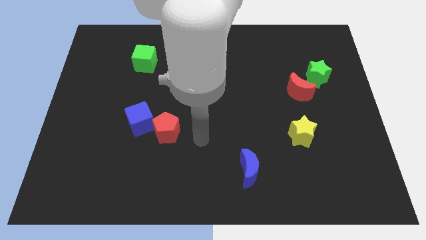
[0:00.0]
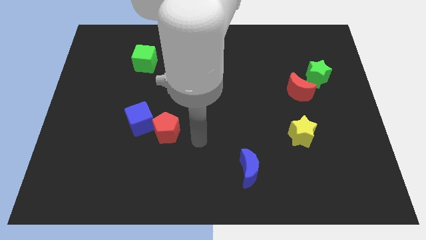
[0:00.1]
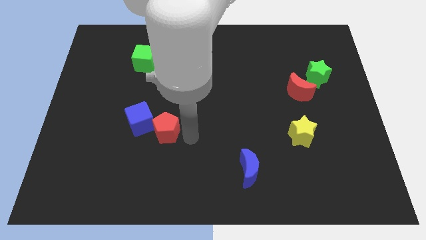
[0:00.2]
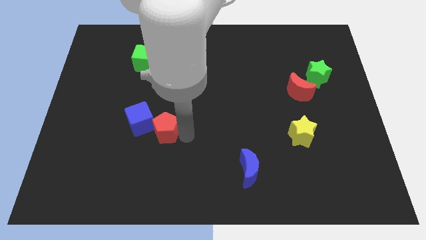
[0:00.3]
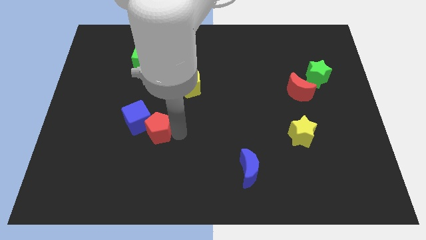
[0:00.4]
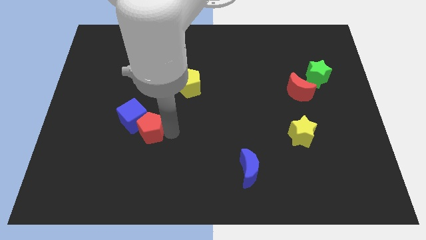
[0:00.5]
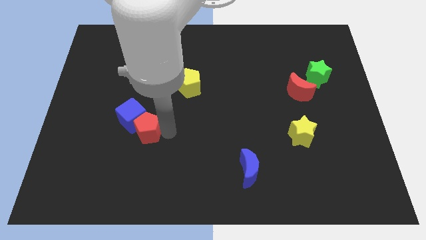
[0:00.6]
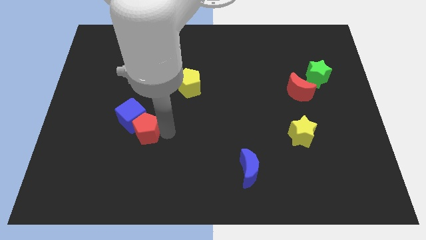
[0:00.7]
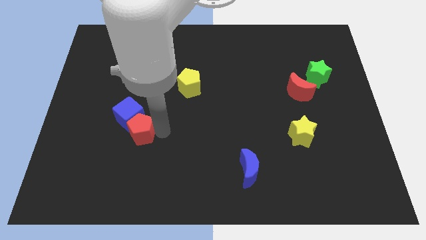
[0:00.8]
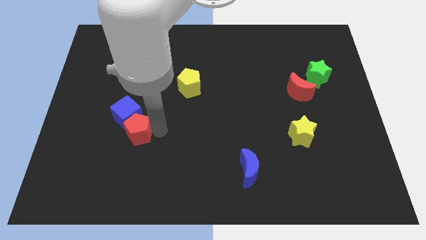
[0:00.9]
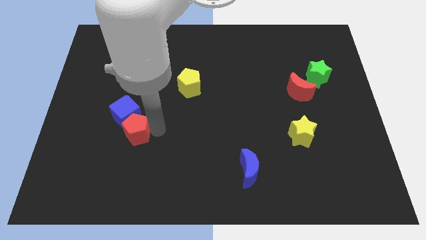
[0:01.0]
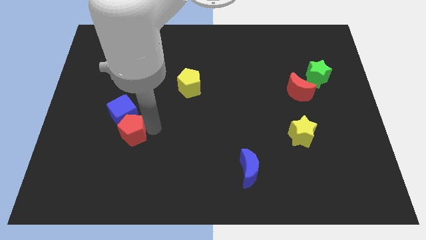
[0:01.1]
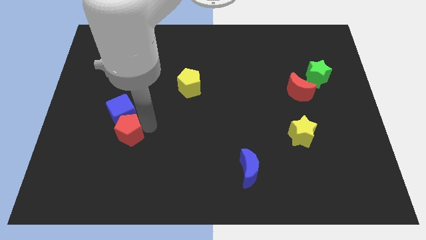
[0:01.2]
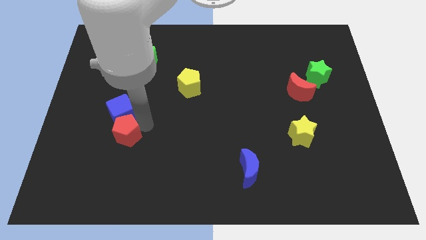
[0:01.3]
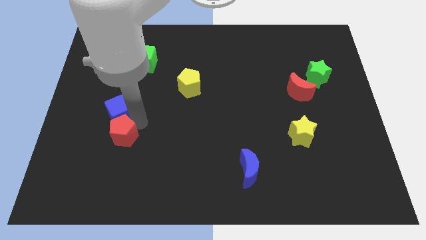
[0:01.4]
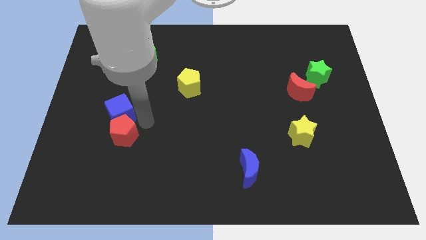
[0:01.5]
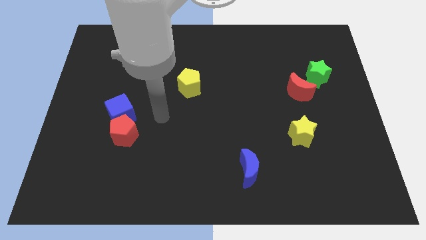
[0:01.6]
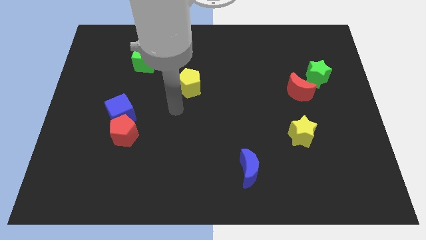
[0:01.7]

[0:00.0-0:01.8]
move the red pentagon to the left

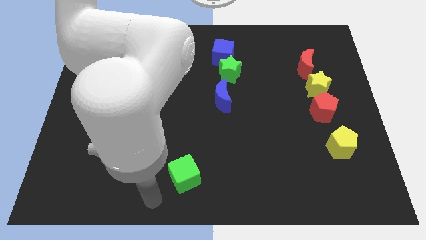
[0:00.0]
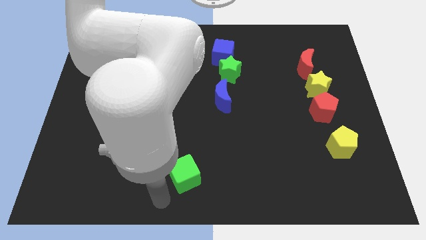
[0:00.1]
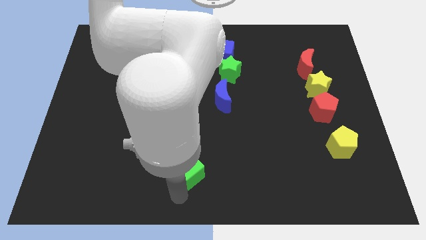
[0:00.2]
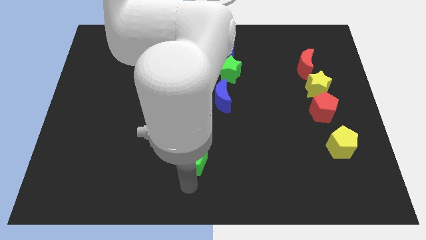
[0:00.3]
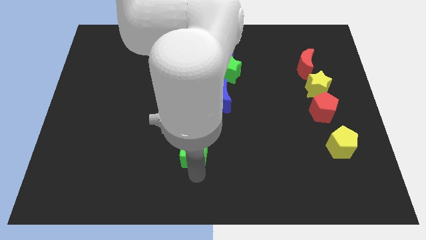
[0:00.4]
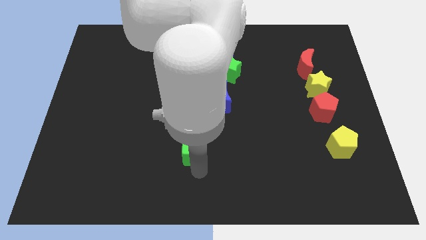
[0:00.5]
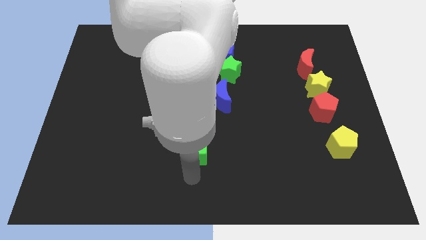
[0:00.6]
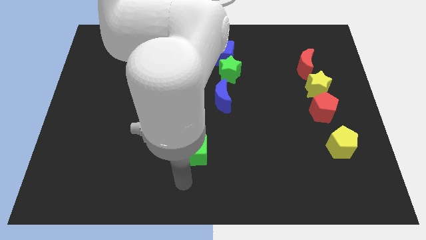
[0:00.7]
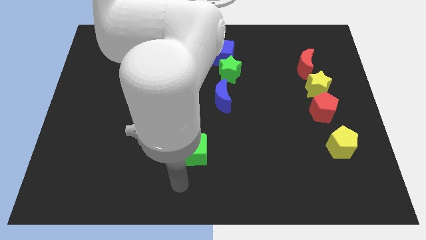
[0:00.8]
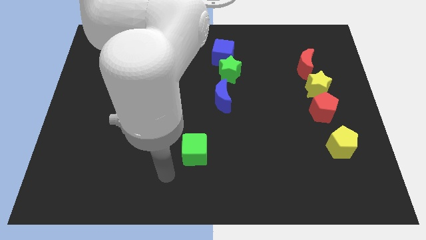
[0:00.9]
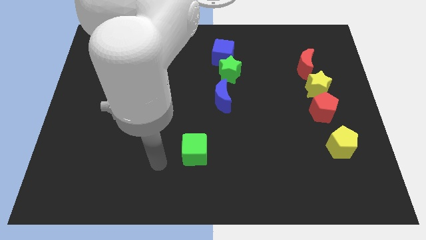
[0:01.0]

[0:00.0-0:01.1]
move the blue cube to the top

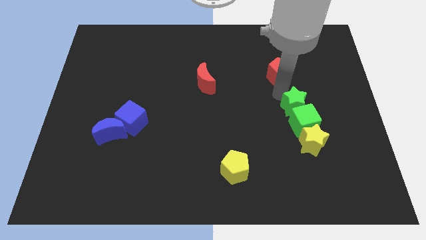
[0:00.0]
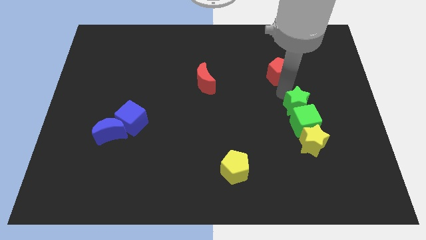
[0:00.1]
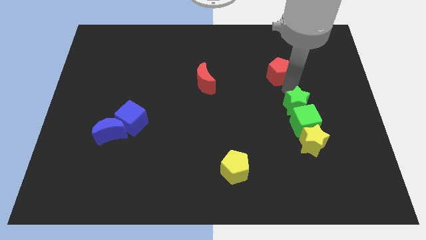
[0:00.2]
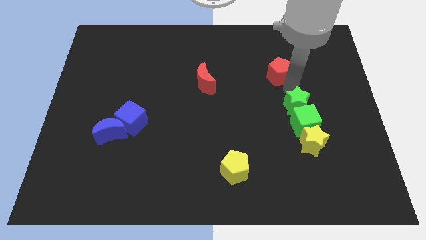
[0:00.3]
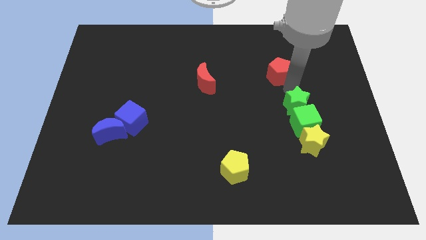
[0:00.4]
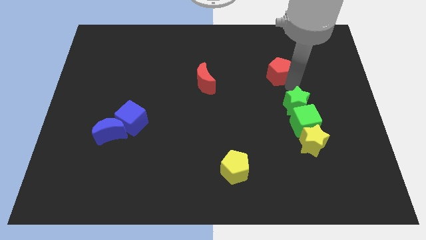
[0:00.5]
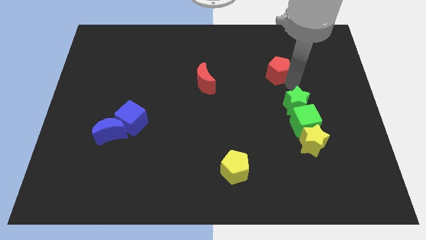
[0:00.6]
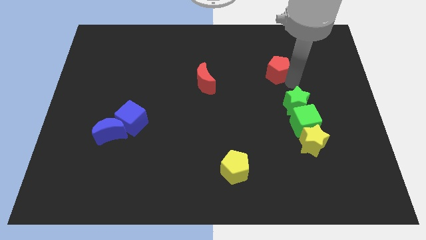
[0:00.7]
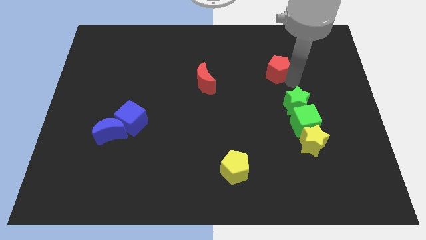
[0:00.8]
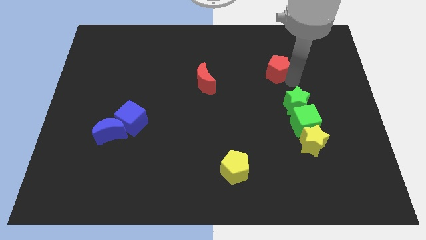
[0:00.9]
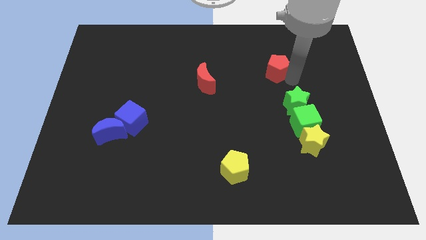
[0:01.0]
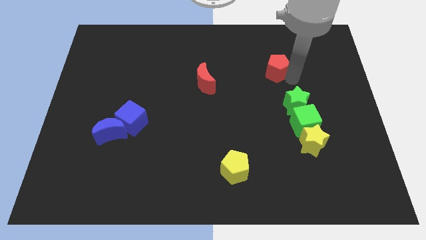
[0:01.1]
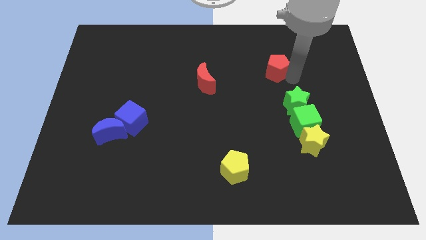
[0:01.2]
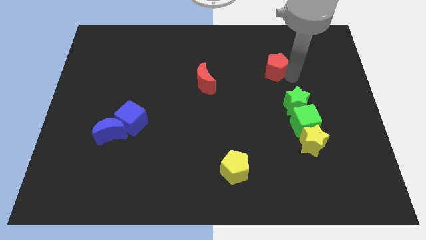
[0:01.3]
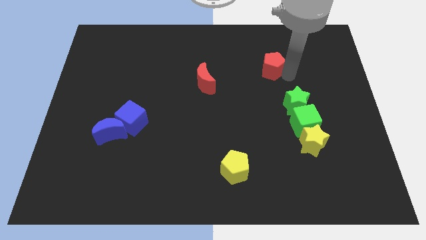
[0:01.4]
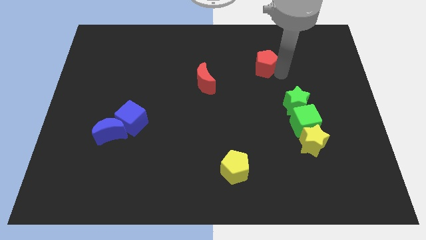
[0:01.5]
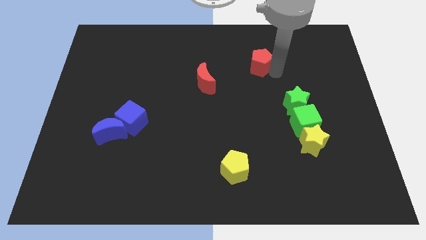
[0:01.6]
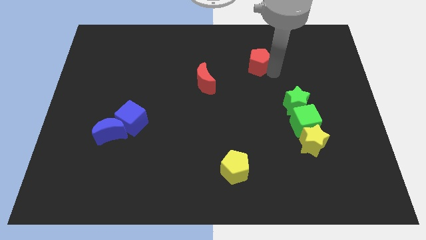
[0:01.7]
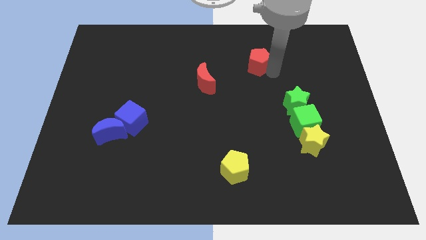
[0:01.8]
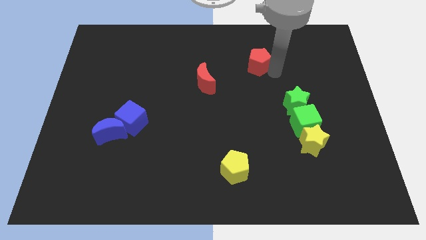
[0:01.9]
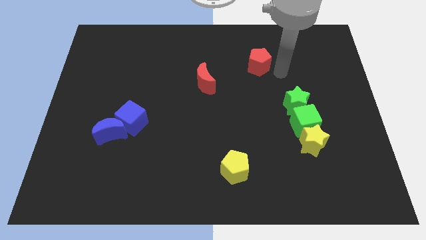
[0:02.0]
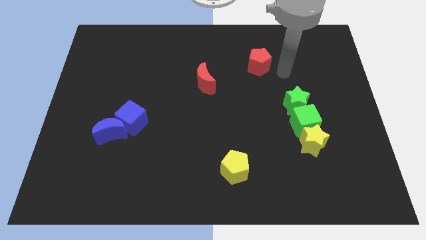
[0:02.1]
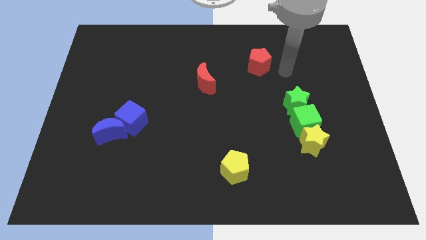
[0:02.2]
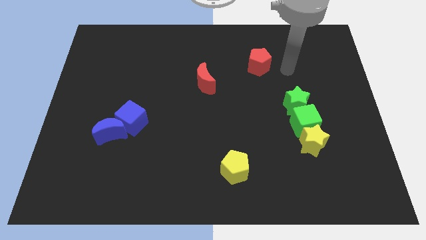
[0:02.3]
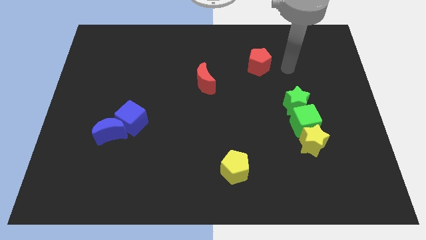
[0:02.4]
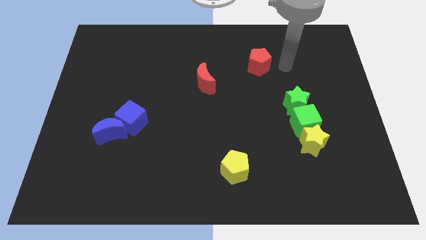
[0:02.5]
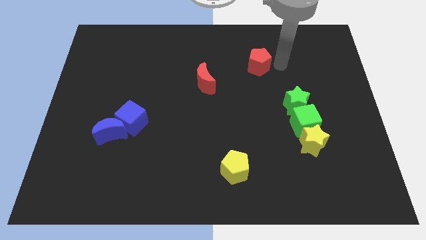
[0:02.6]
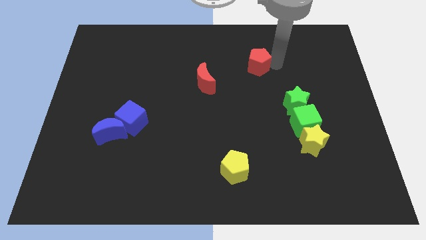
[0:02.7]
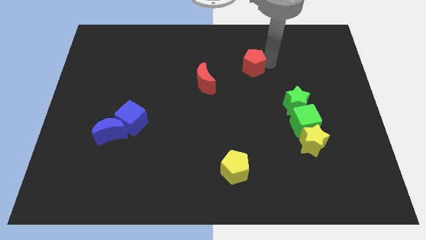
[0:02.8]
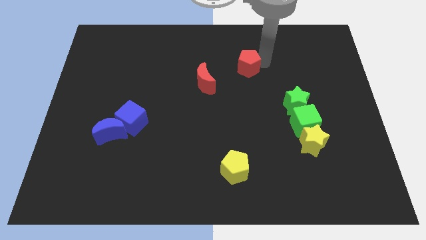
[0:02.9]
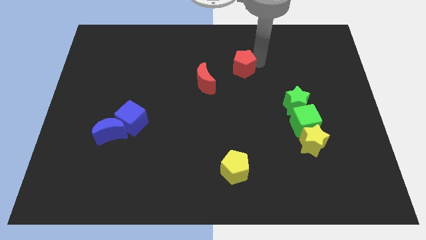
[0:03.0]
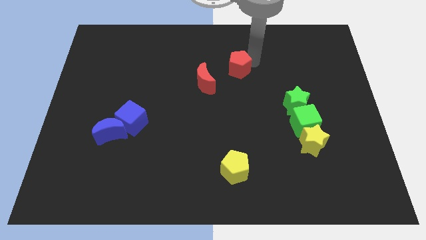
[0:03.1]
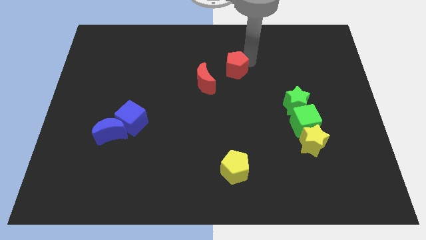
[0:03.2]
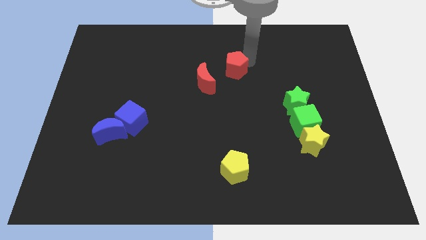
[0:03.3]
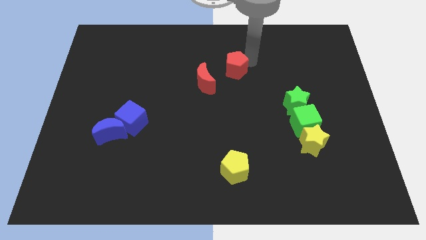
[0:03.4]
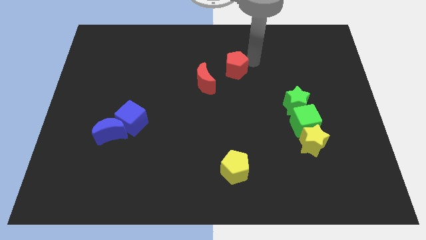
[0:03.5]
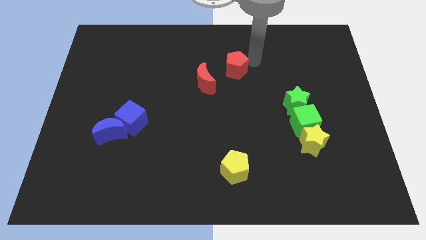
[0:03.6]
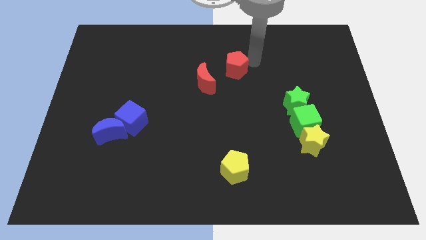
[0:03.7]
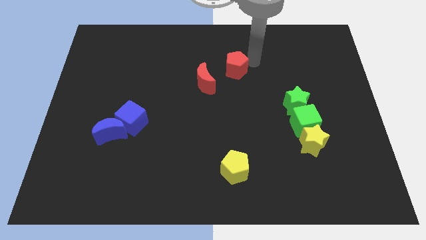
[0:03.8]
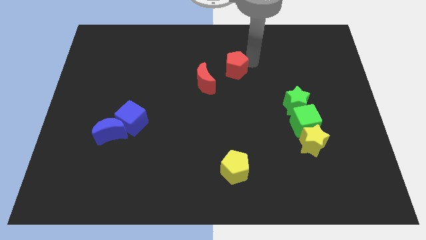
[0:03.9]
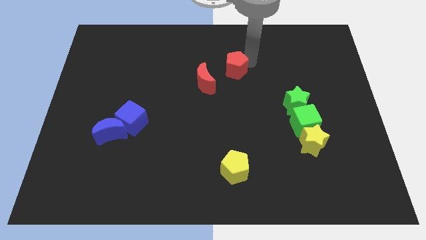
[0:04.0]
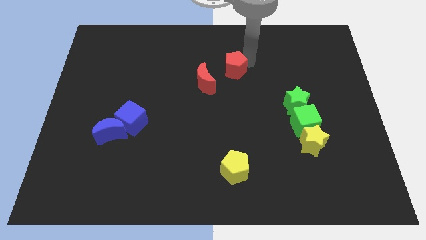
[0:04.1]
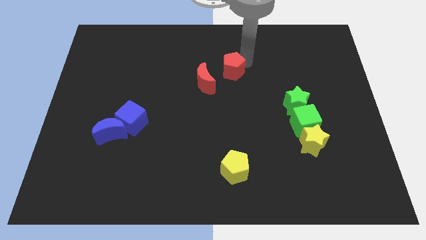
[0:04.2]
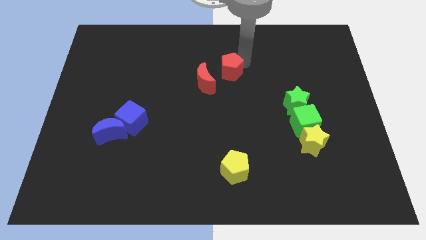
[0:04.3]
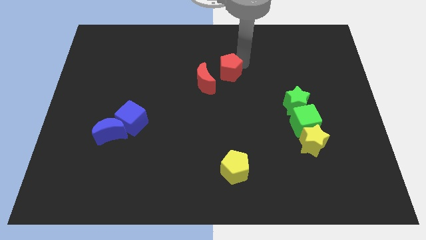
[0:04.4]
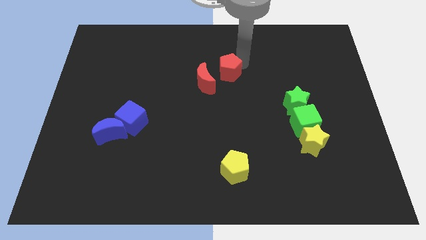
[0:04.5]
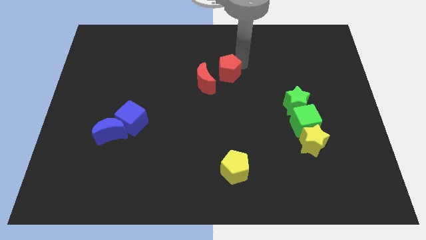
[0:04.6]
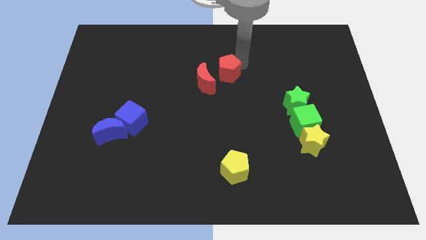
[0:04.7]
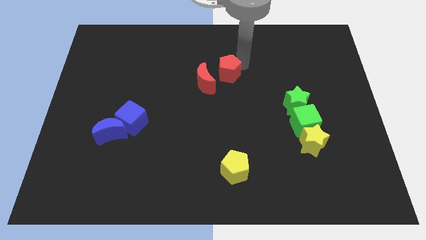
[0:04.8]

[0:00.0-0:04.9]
slide the red pentagon towards the right side of the red moon

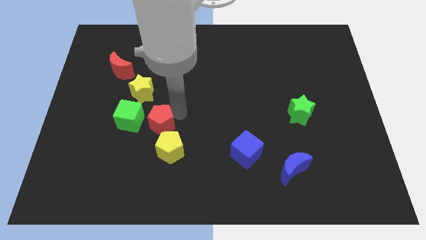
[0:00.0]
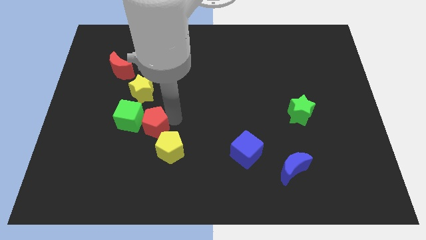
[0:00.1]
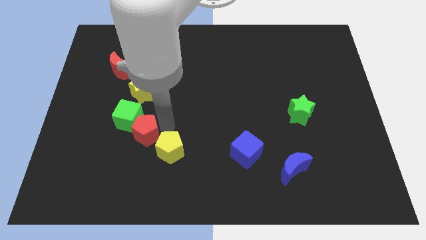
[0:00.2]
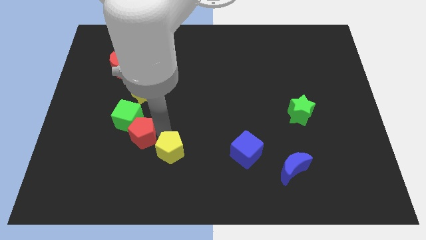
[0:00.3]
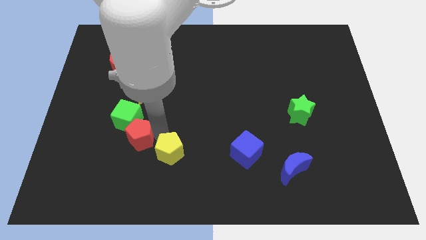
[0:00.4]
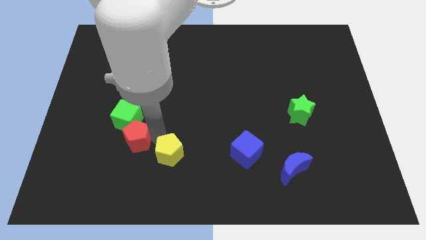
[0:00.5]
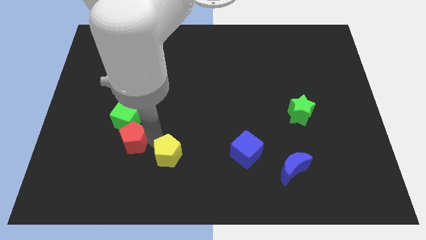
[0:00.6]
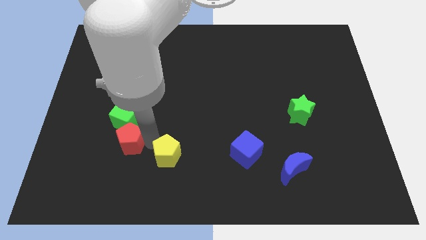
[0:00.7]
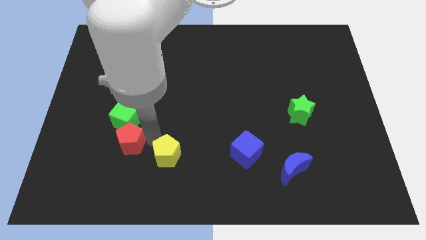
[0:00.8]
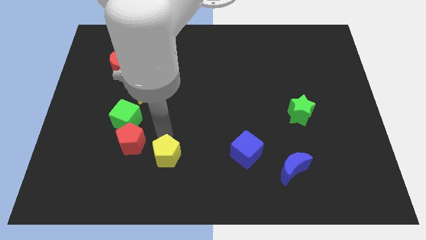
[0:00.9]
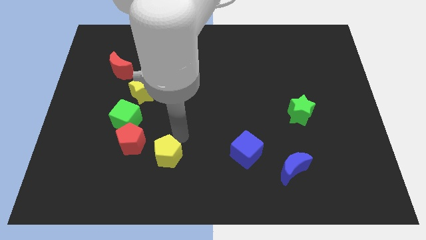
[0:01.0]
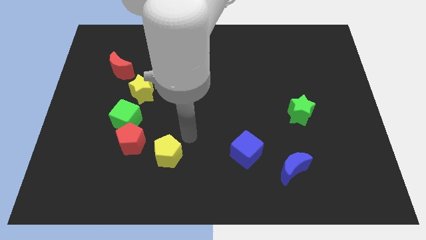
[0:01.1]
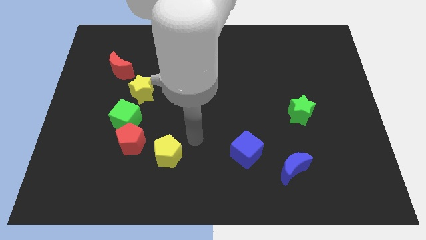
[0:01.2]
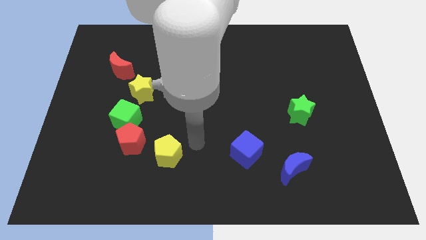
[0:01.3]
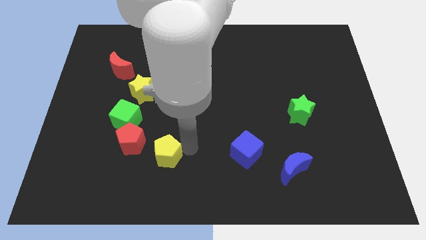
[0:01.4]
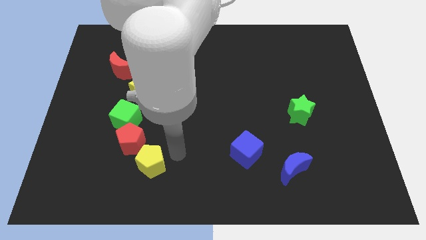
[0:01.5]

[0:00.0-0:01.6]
put the red pentagon below the green cube
